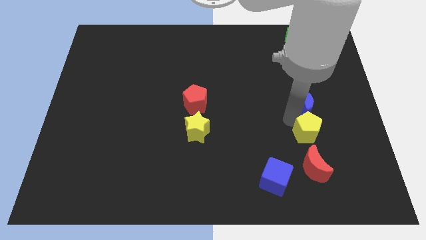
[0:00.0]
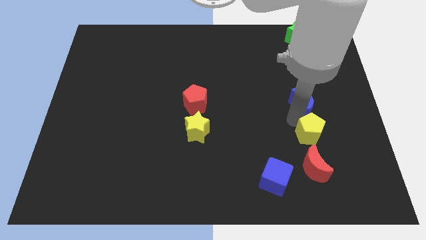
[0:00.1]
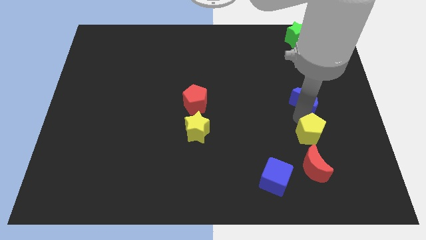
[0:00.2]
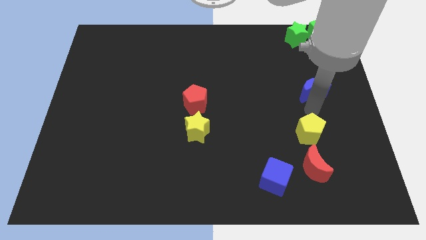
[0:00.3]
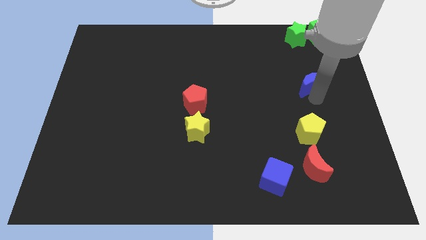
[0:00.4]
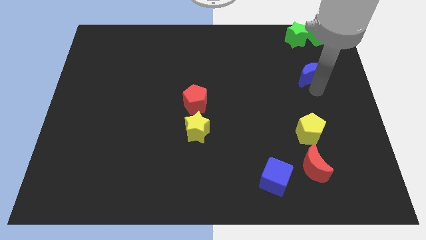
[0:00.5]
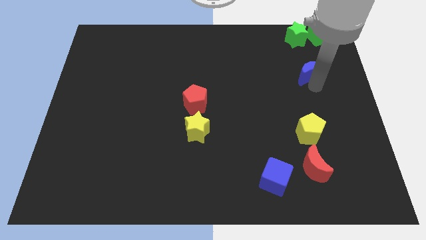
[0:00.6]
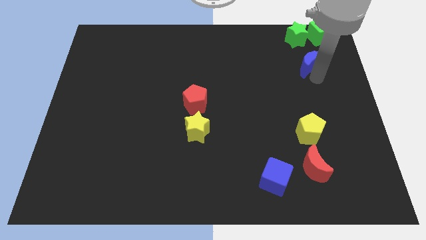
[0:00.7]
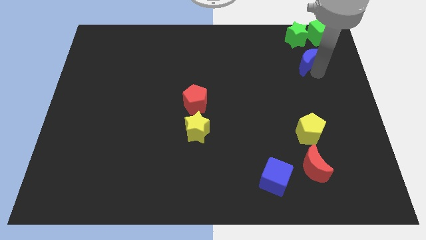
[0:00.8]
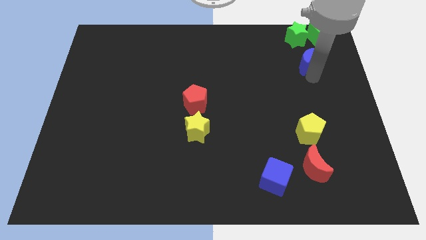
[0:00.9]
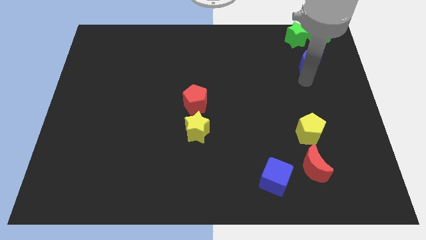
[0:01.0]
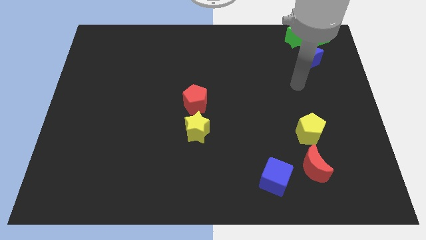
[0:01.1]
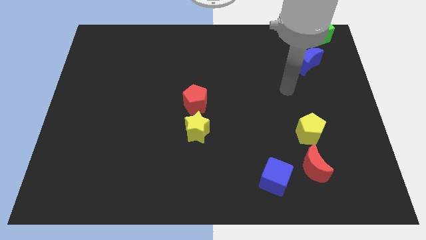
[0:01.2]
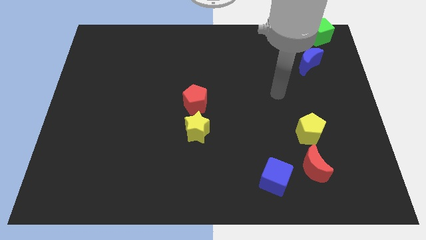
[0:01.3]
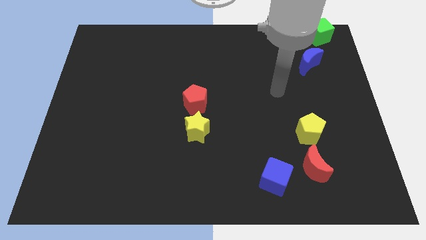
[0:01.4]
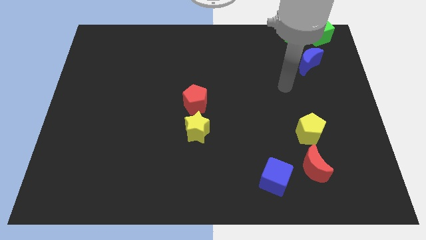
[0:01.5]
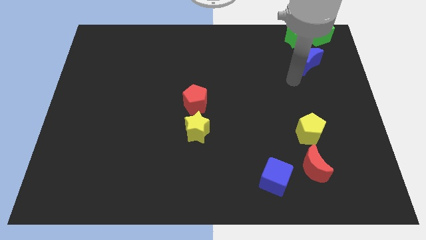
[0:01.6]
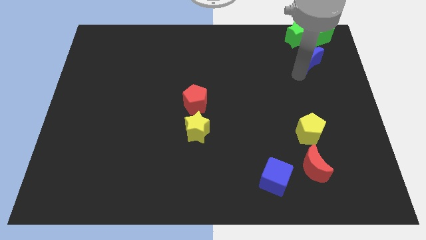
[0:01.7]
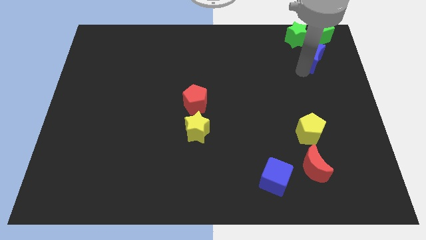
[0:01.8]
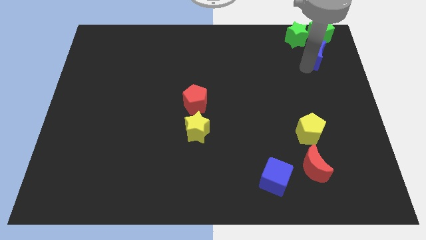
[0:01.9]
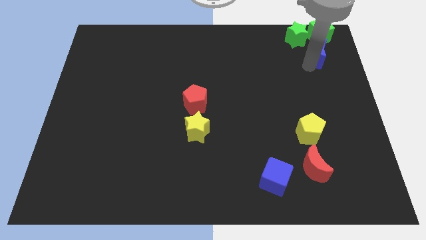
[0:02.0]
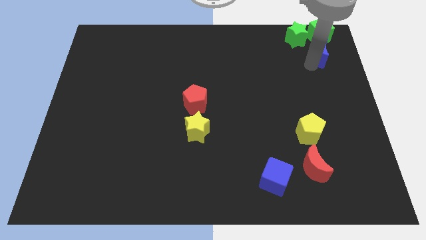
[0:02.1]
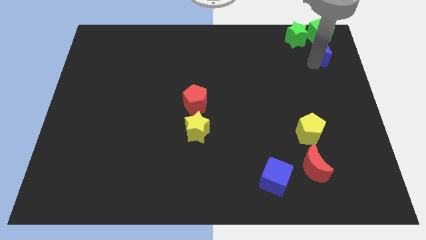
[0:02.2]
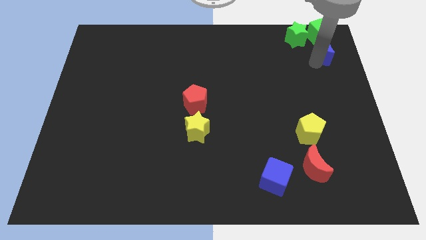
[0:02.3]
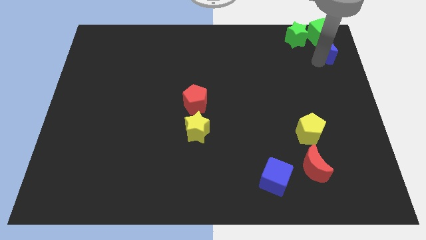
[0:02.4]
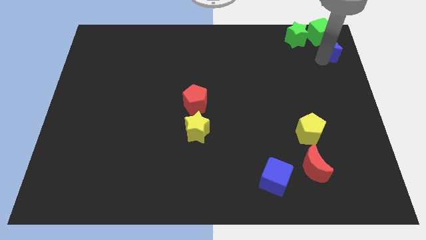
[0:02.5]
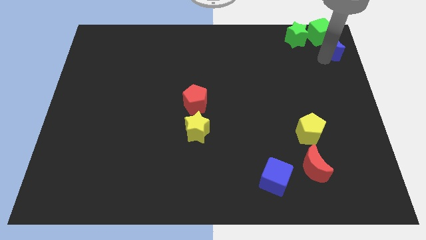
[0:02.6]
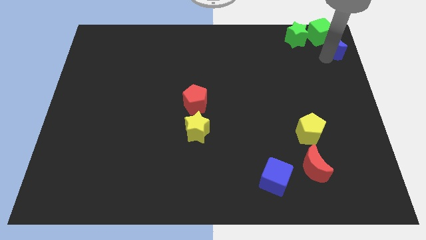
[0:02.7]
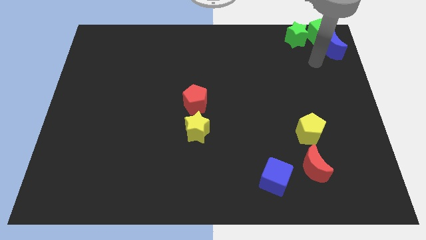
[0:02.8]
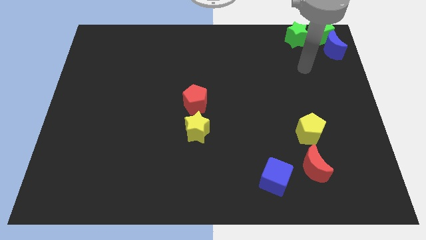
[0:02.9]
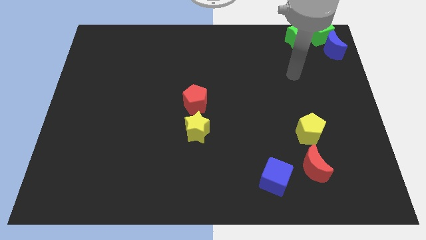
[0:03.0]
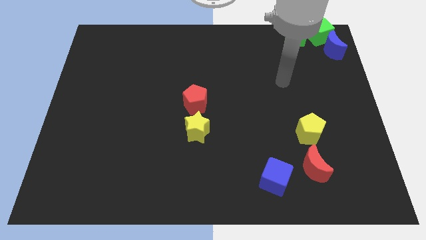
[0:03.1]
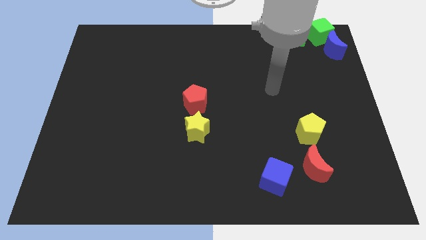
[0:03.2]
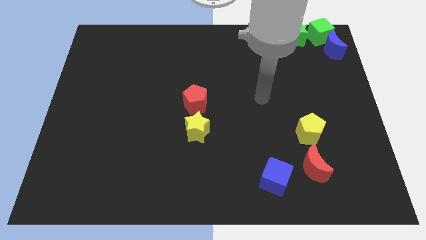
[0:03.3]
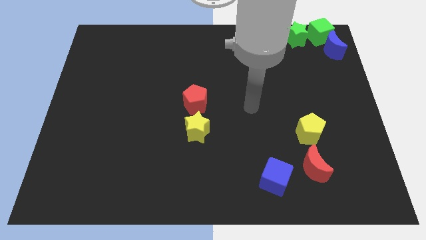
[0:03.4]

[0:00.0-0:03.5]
place the blue crescent below the green cube

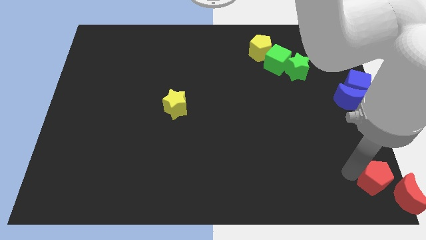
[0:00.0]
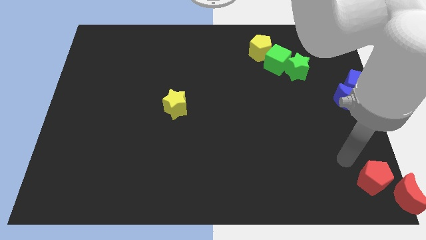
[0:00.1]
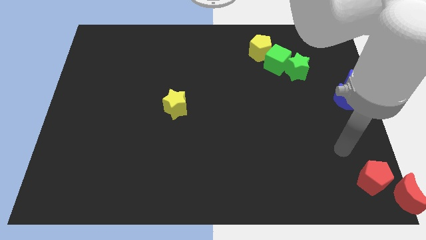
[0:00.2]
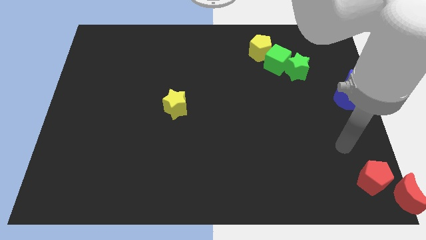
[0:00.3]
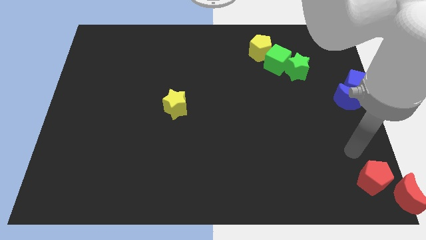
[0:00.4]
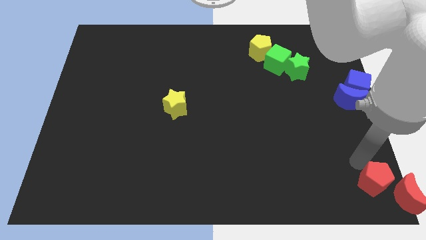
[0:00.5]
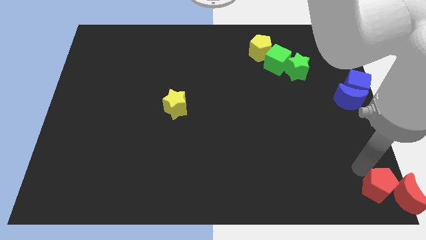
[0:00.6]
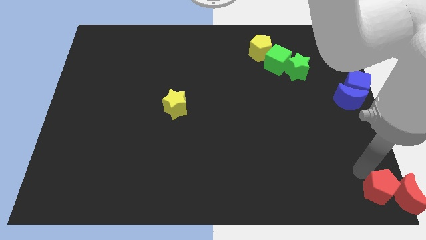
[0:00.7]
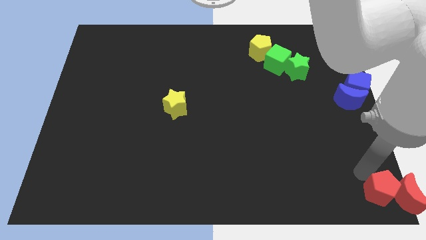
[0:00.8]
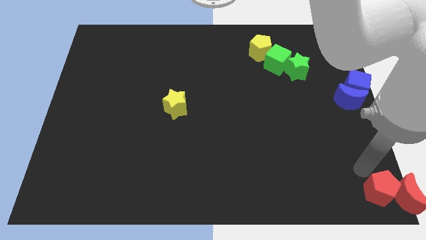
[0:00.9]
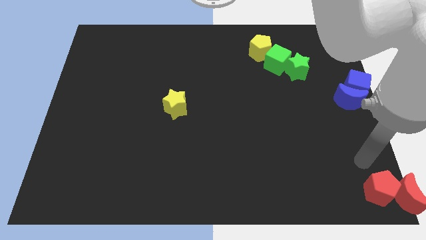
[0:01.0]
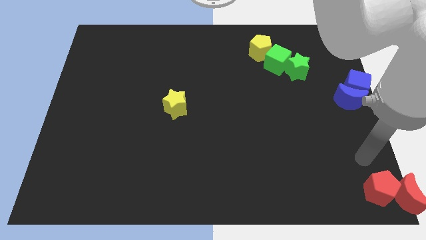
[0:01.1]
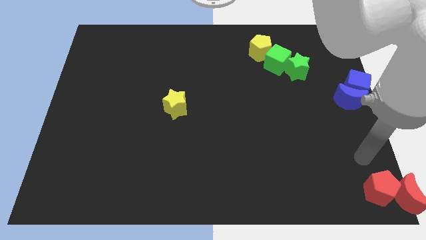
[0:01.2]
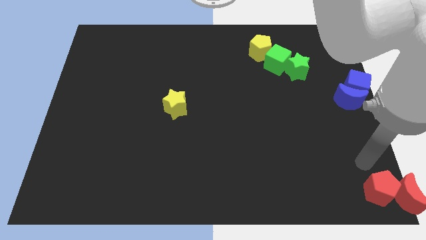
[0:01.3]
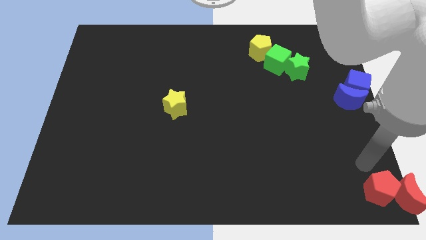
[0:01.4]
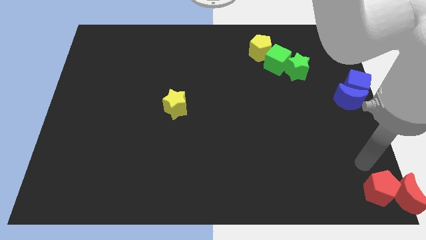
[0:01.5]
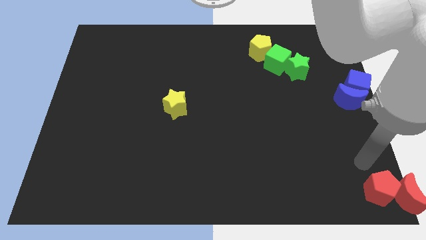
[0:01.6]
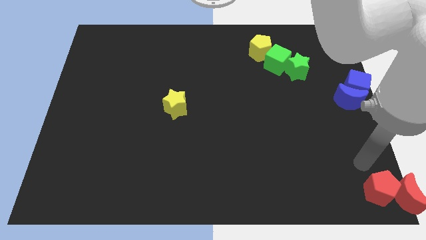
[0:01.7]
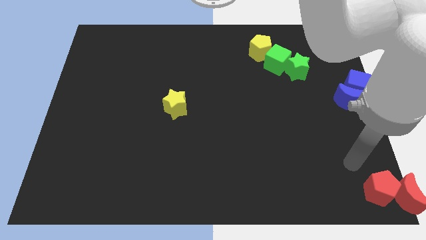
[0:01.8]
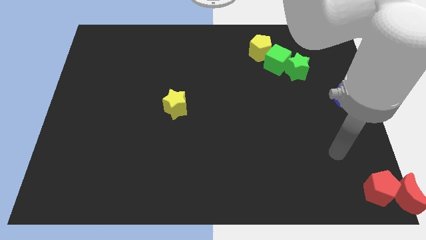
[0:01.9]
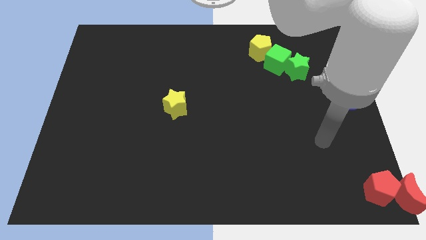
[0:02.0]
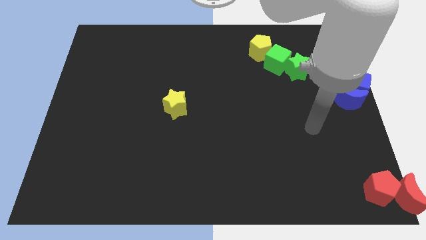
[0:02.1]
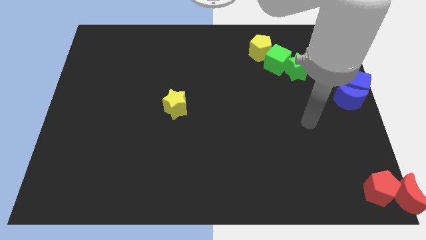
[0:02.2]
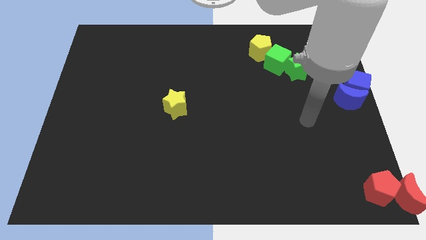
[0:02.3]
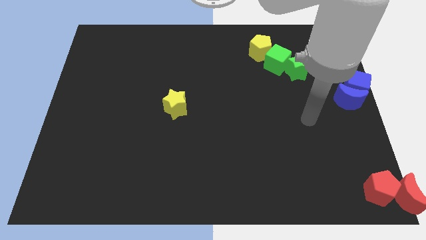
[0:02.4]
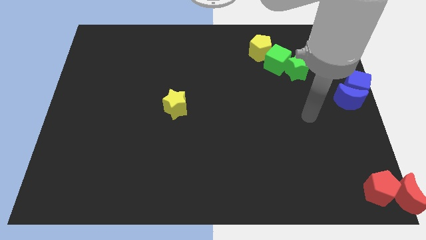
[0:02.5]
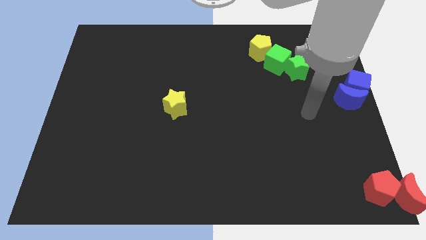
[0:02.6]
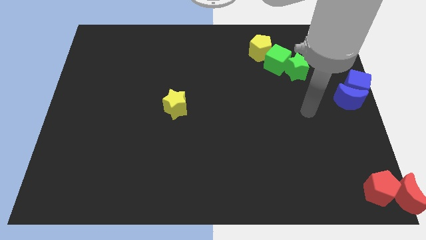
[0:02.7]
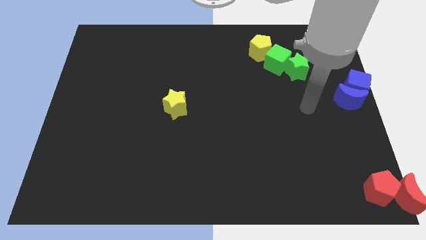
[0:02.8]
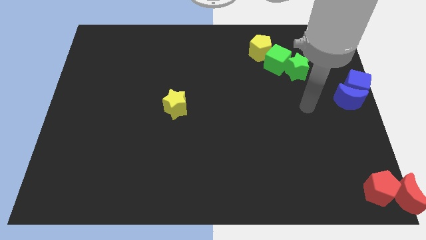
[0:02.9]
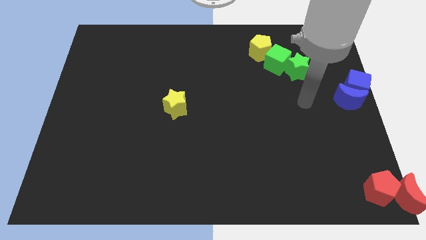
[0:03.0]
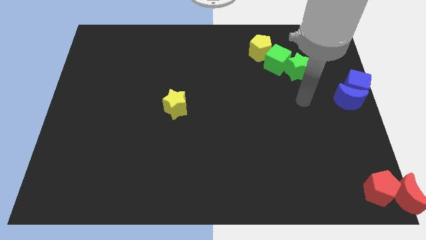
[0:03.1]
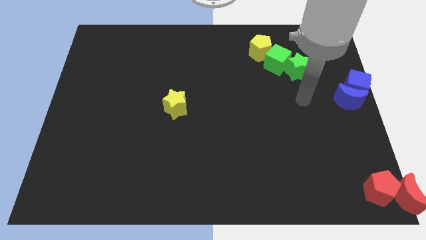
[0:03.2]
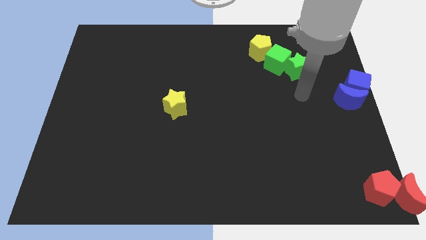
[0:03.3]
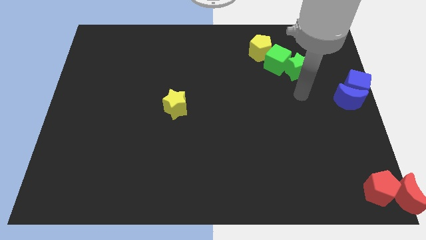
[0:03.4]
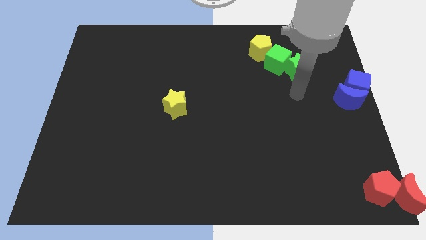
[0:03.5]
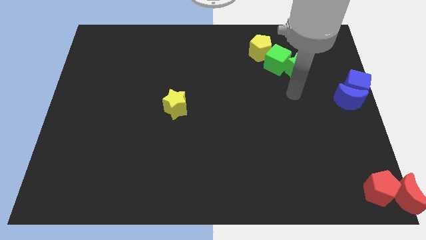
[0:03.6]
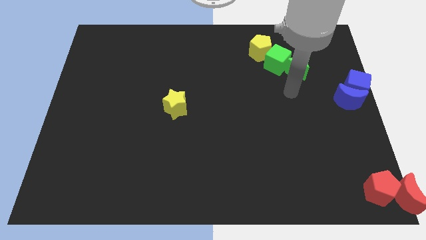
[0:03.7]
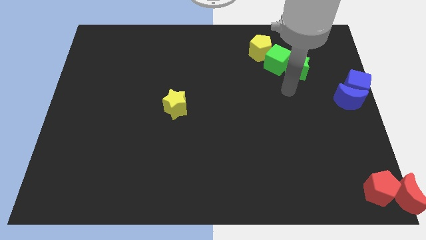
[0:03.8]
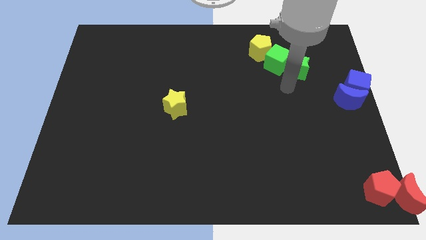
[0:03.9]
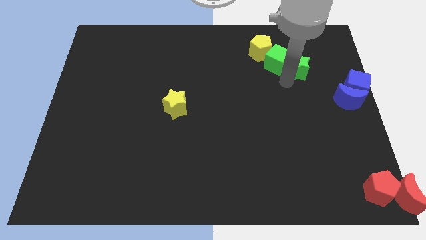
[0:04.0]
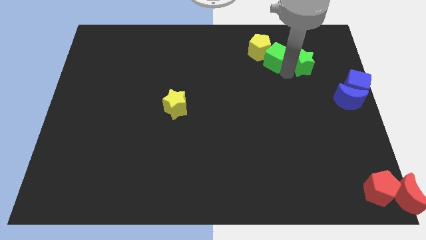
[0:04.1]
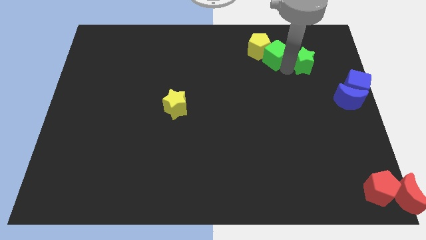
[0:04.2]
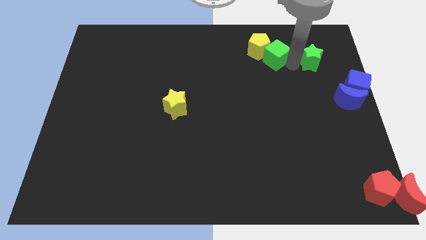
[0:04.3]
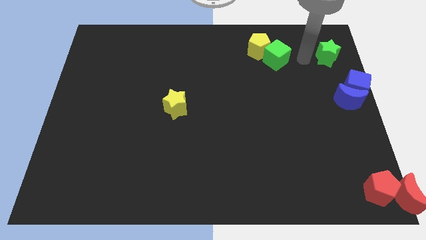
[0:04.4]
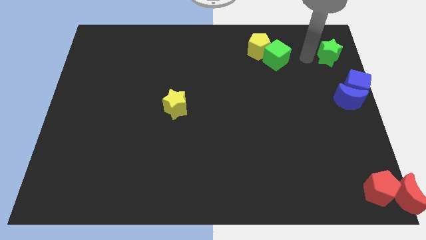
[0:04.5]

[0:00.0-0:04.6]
push the green star towards the top right of the board

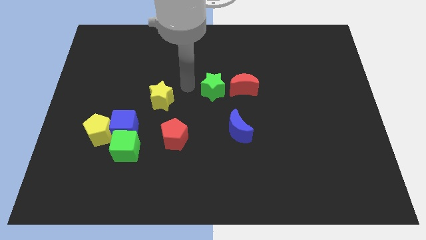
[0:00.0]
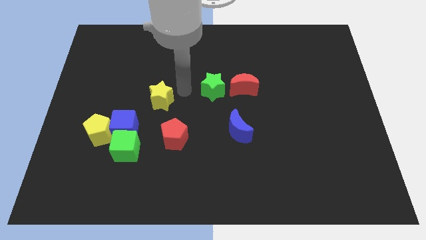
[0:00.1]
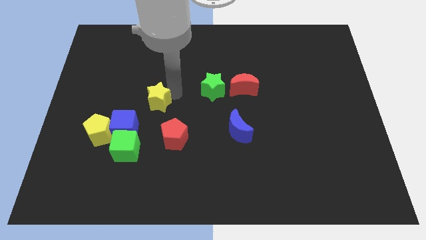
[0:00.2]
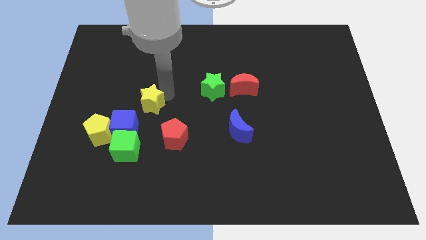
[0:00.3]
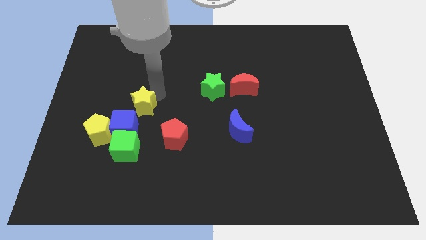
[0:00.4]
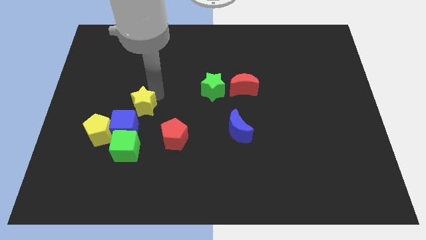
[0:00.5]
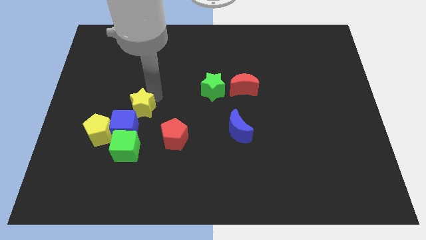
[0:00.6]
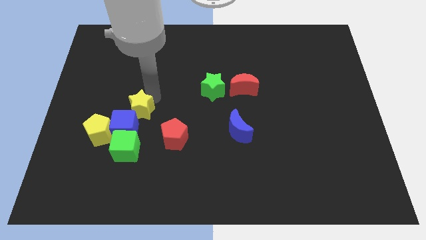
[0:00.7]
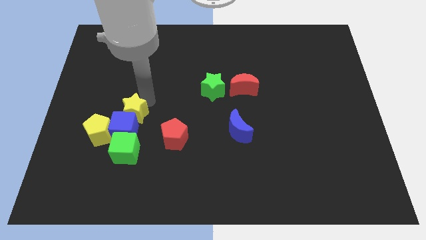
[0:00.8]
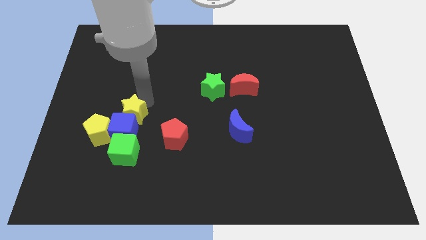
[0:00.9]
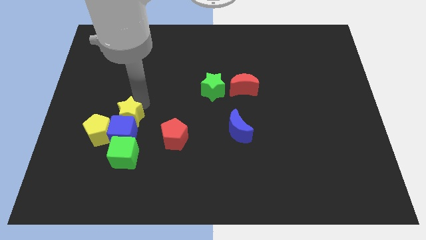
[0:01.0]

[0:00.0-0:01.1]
put the yellow star at the top of the blue cube
